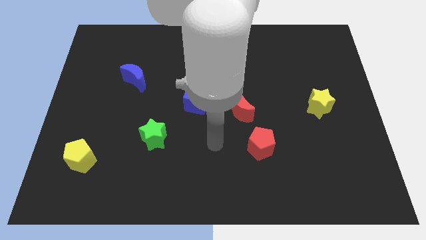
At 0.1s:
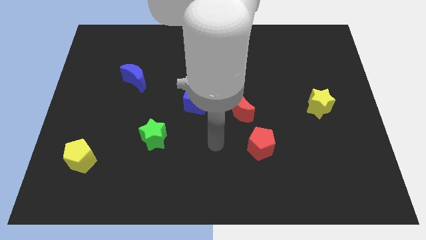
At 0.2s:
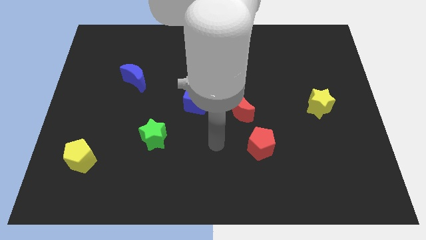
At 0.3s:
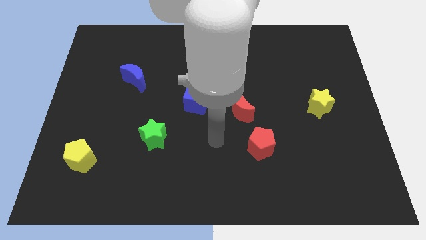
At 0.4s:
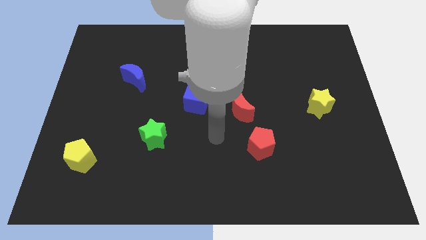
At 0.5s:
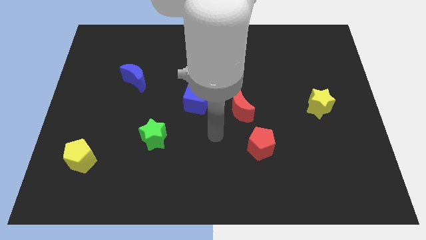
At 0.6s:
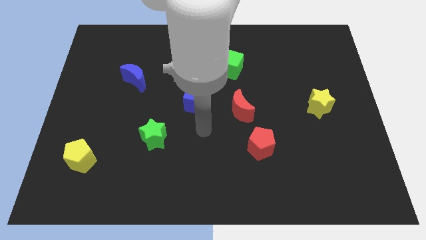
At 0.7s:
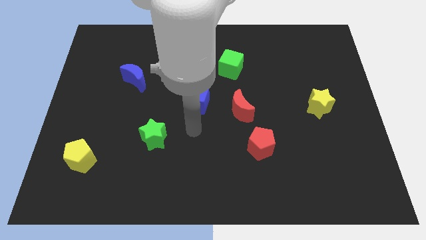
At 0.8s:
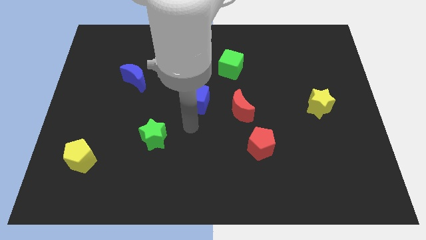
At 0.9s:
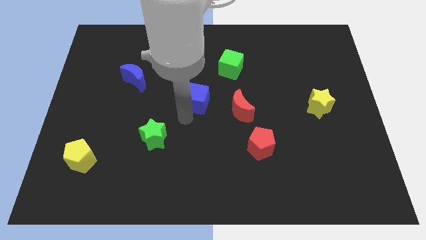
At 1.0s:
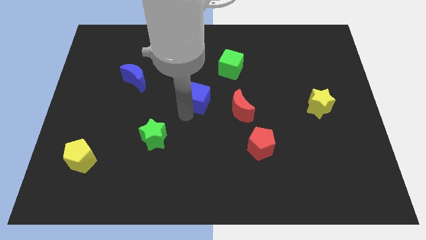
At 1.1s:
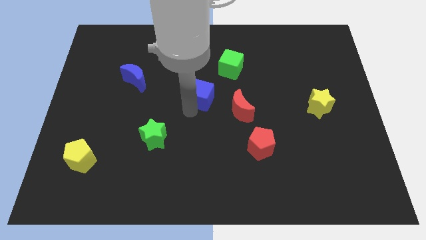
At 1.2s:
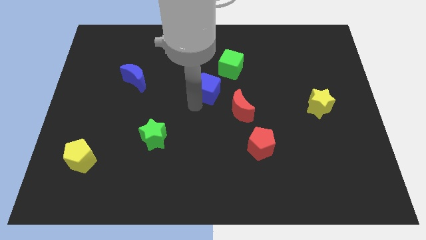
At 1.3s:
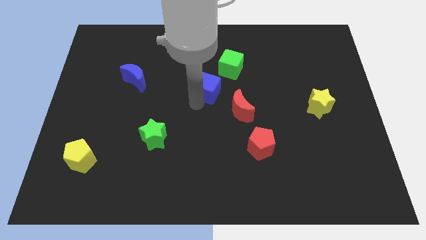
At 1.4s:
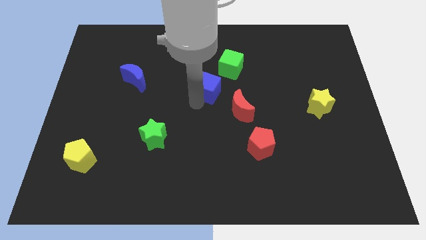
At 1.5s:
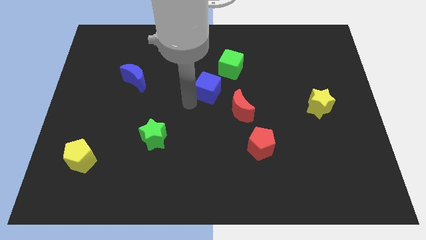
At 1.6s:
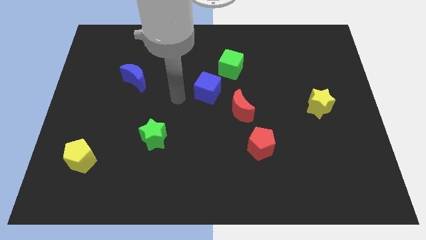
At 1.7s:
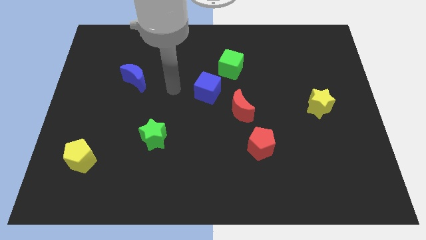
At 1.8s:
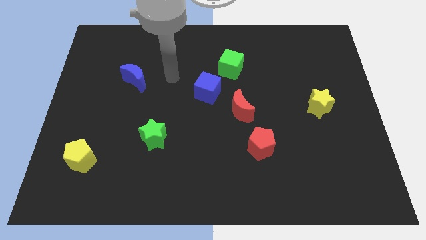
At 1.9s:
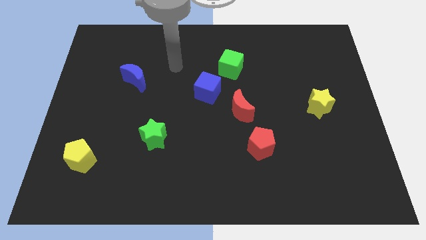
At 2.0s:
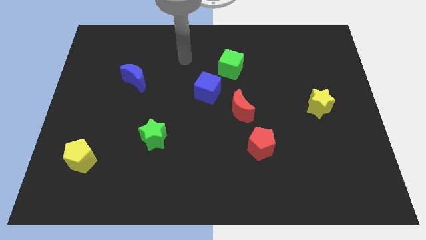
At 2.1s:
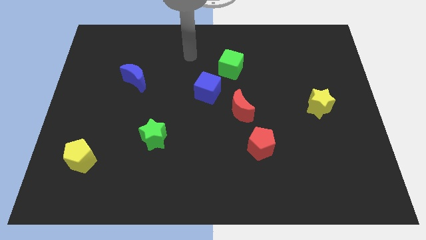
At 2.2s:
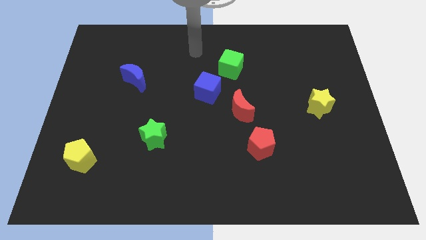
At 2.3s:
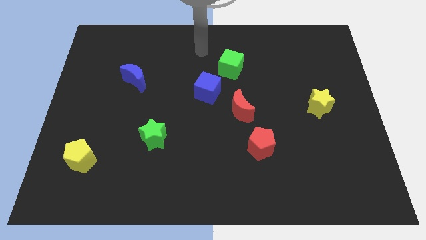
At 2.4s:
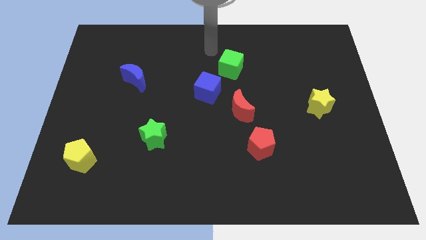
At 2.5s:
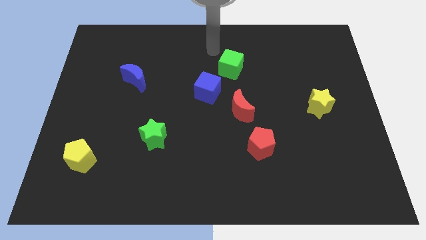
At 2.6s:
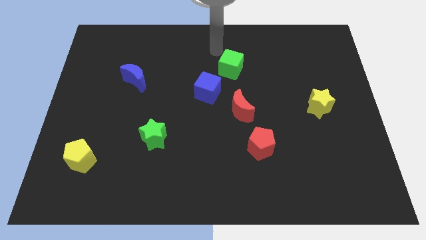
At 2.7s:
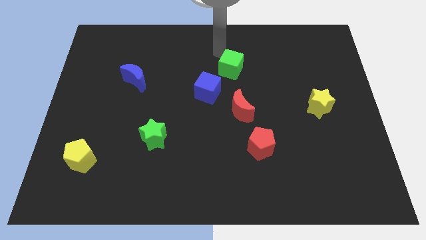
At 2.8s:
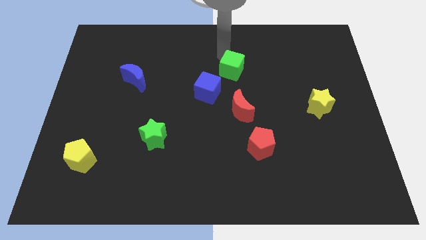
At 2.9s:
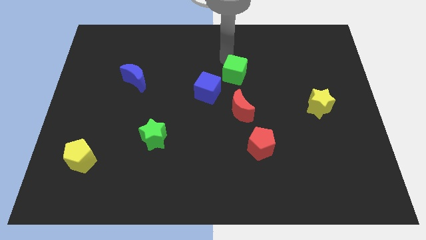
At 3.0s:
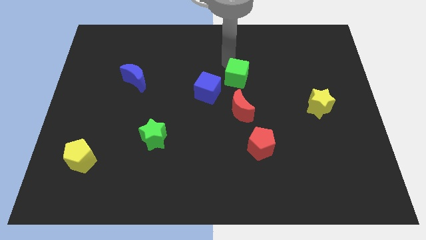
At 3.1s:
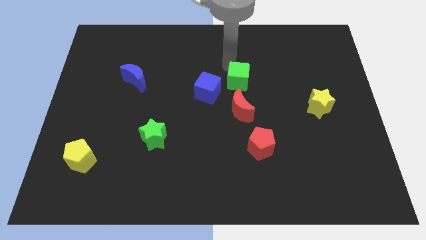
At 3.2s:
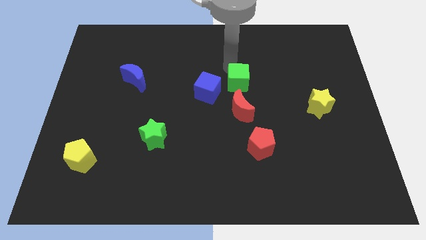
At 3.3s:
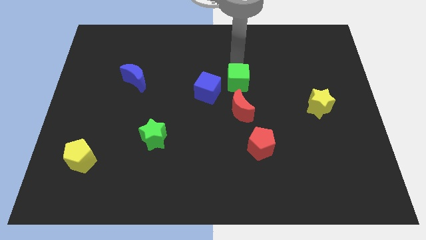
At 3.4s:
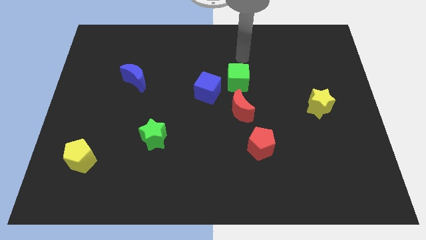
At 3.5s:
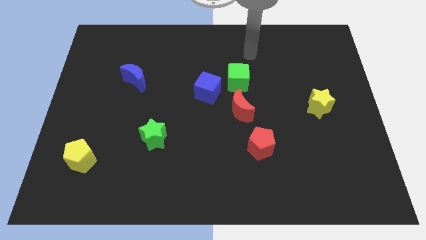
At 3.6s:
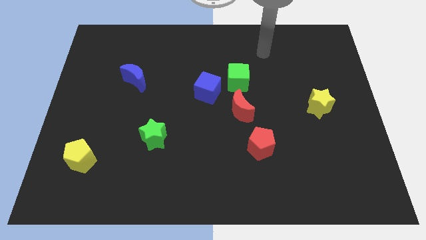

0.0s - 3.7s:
move the green cube above the red crescent

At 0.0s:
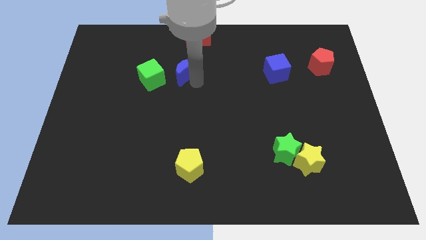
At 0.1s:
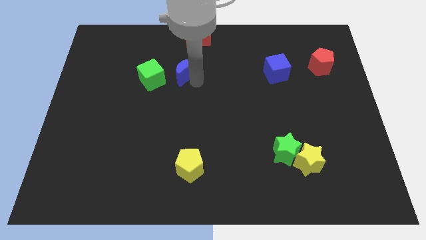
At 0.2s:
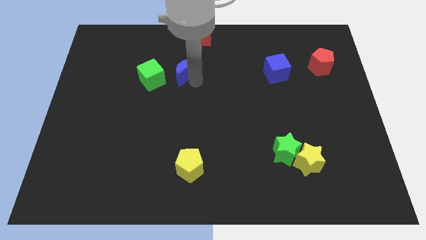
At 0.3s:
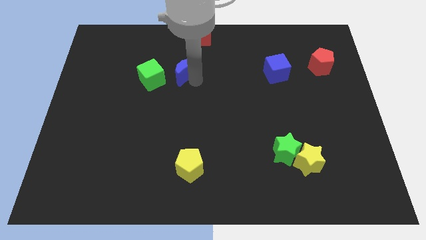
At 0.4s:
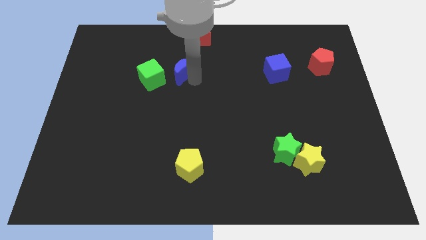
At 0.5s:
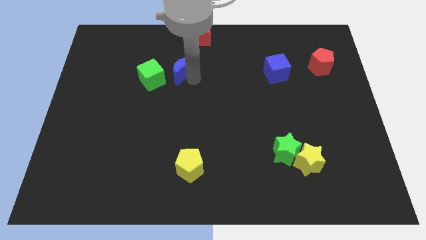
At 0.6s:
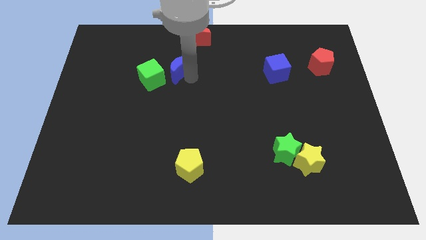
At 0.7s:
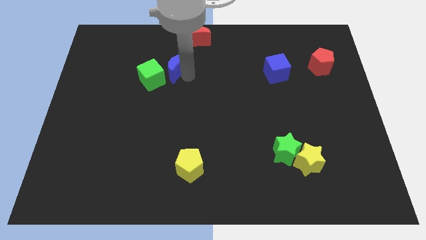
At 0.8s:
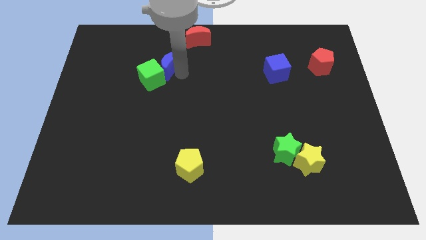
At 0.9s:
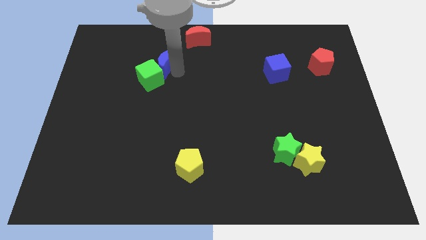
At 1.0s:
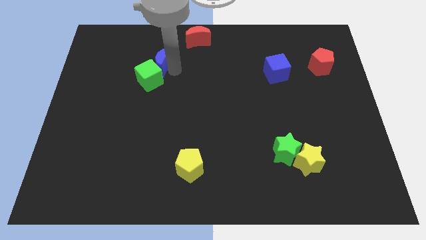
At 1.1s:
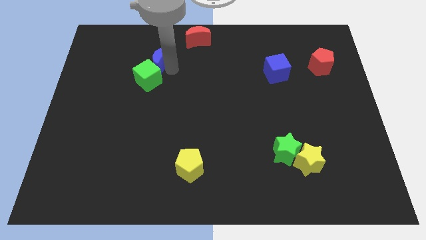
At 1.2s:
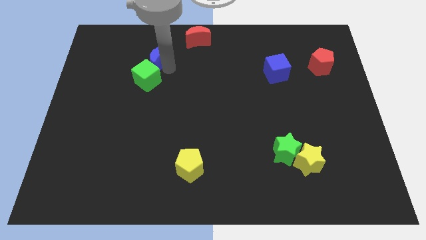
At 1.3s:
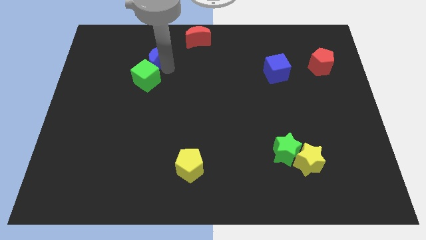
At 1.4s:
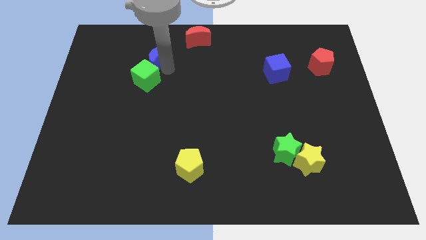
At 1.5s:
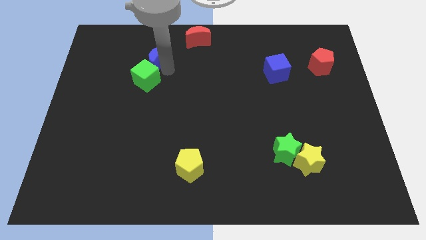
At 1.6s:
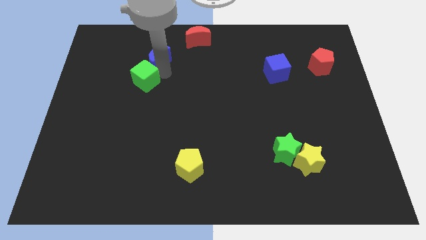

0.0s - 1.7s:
move the blue crescent to the top of the green cube

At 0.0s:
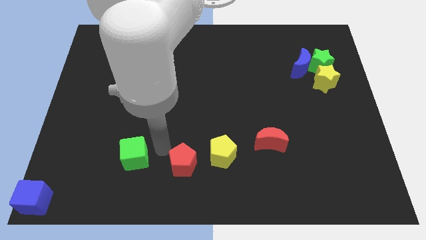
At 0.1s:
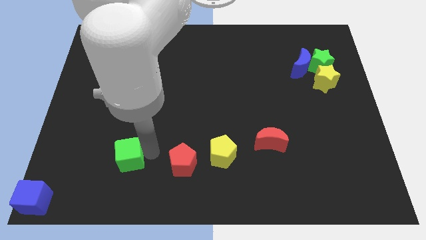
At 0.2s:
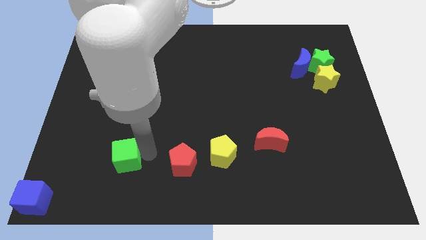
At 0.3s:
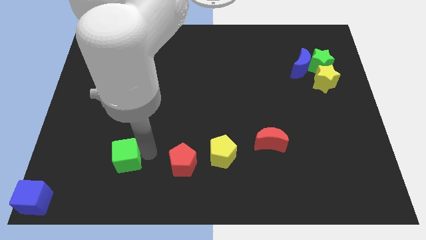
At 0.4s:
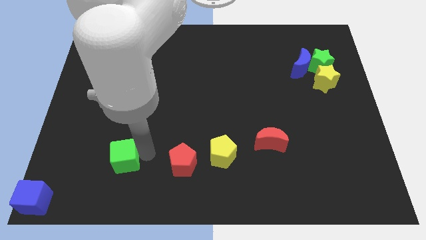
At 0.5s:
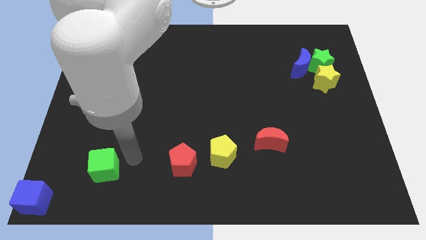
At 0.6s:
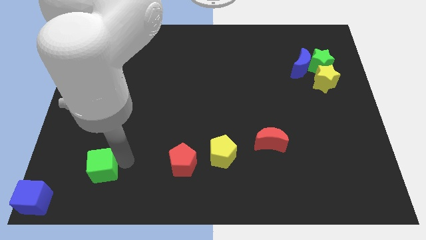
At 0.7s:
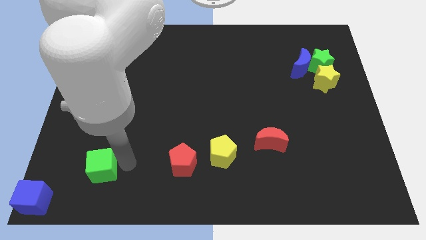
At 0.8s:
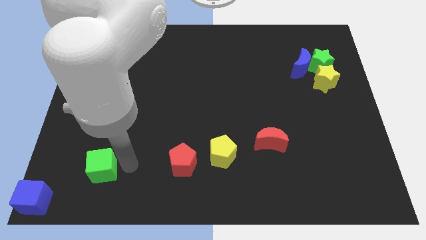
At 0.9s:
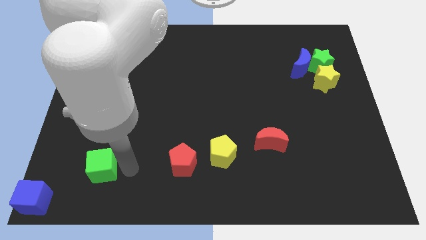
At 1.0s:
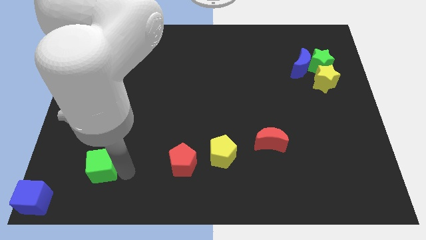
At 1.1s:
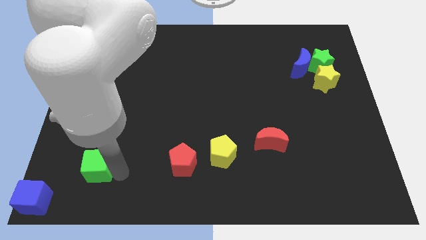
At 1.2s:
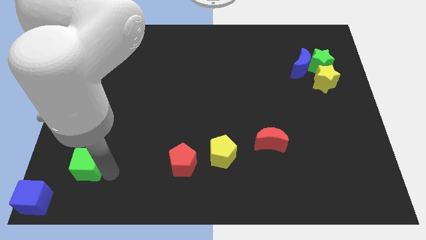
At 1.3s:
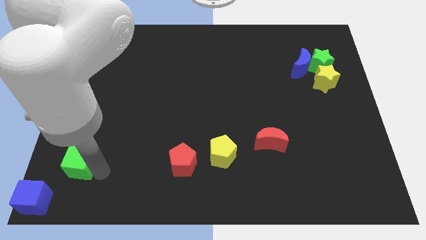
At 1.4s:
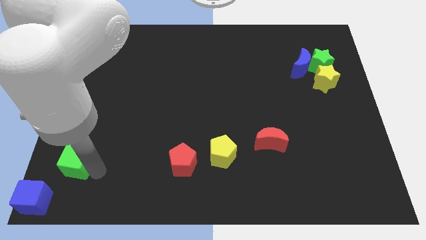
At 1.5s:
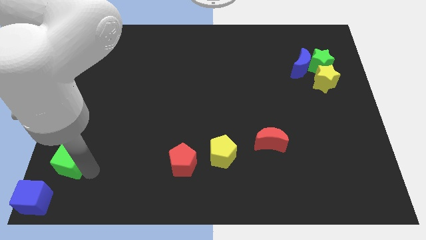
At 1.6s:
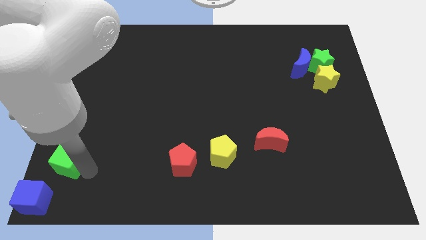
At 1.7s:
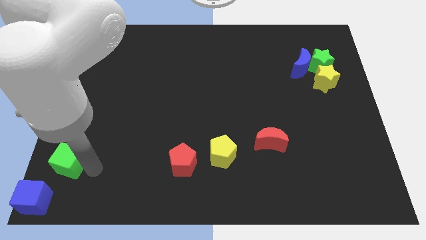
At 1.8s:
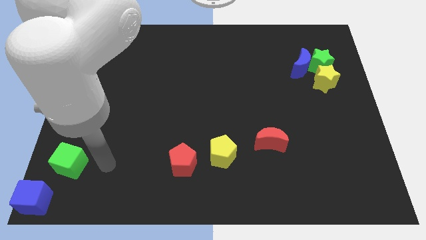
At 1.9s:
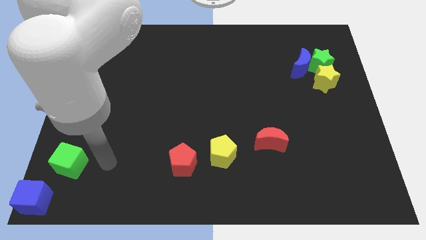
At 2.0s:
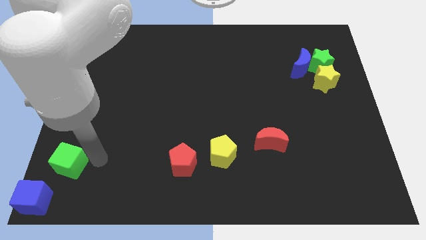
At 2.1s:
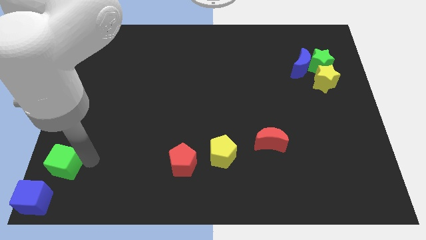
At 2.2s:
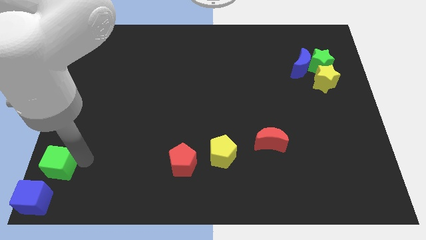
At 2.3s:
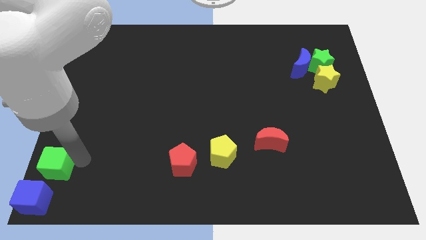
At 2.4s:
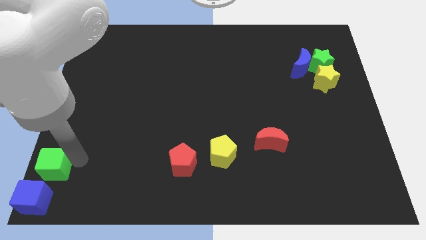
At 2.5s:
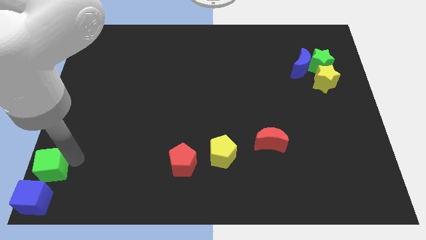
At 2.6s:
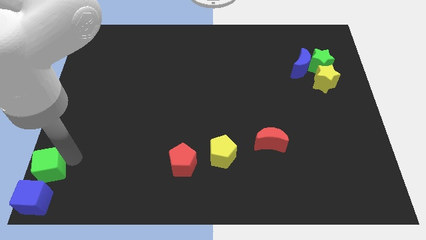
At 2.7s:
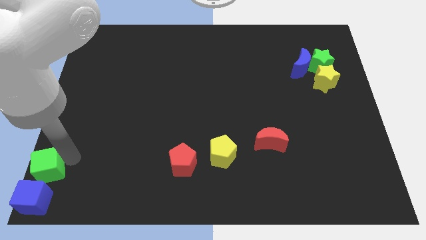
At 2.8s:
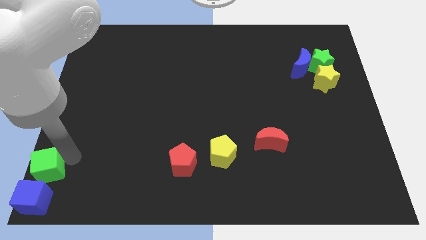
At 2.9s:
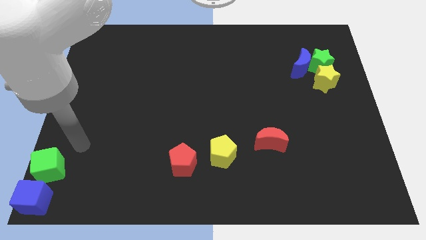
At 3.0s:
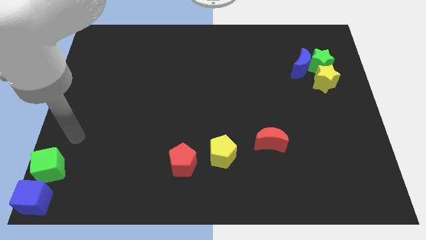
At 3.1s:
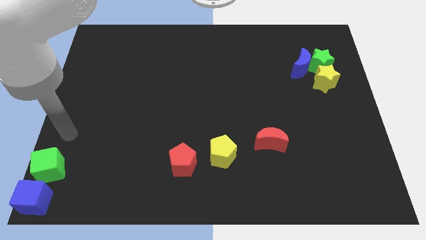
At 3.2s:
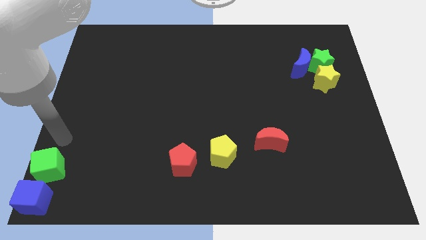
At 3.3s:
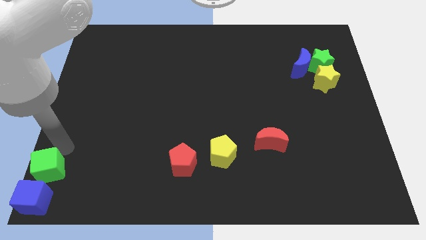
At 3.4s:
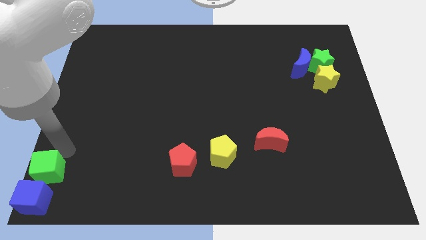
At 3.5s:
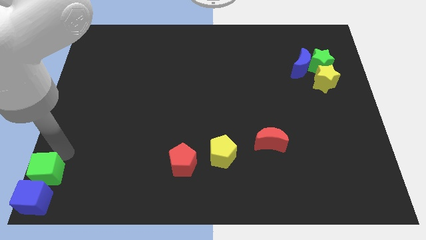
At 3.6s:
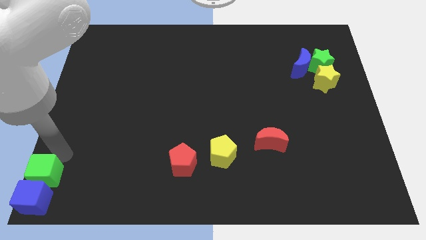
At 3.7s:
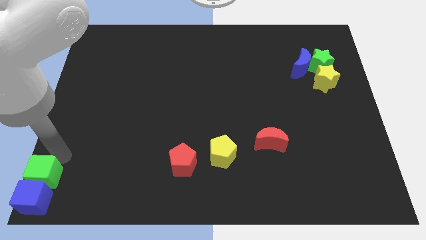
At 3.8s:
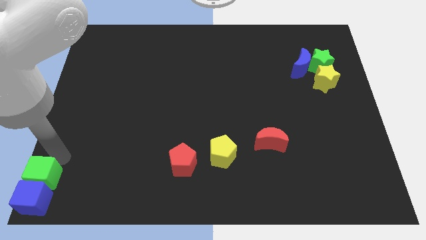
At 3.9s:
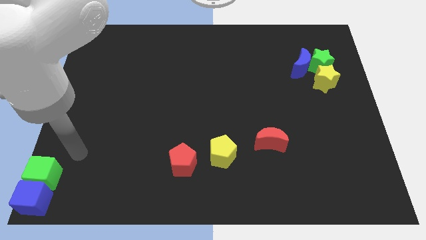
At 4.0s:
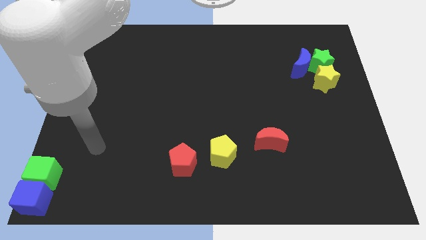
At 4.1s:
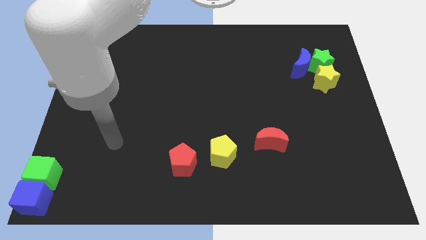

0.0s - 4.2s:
place the green cube above the blue cube
